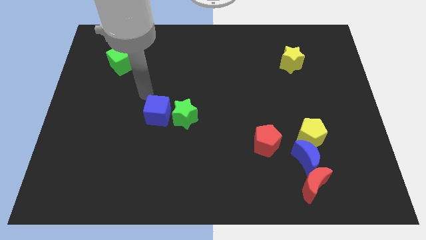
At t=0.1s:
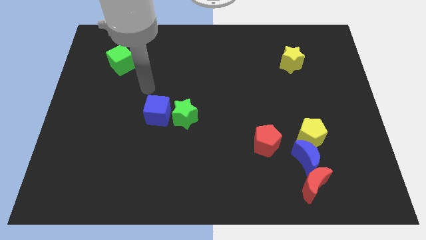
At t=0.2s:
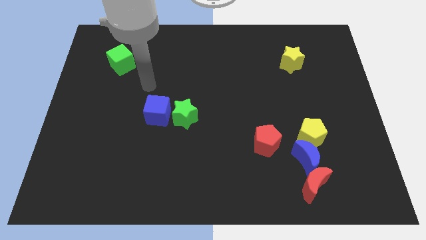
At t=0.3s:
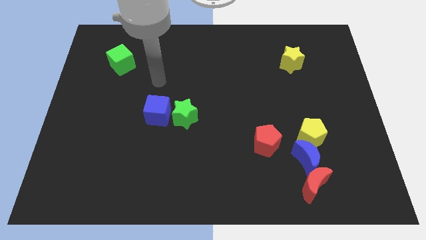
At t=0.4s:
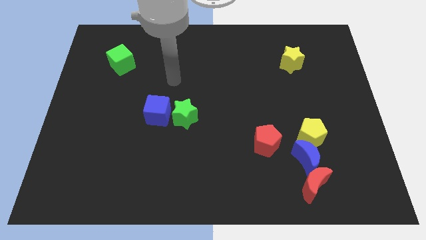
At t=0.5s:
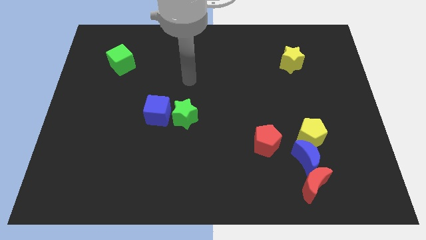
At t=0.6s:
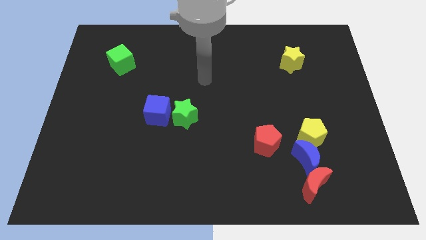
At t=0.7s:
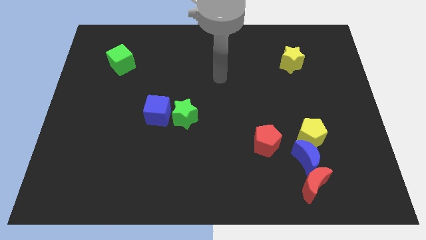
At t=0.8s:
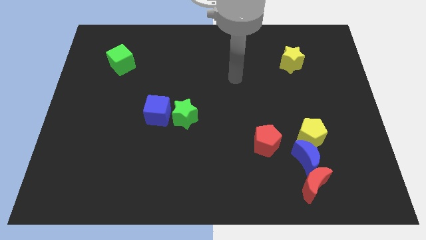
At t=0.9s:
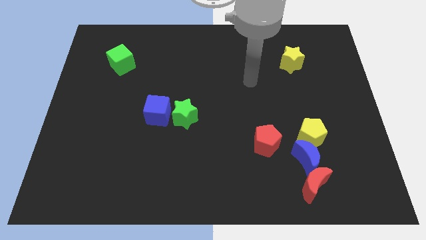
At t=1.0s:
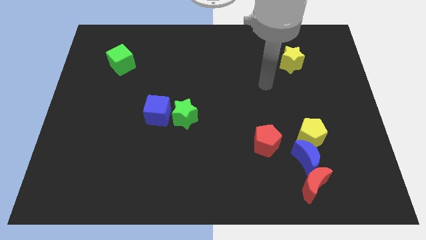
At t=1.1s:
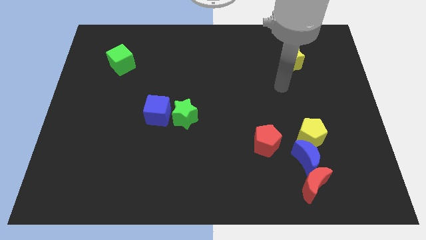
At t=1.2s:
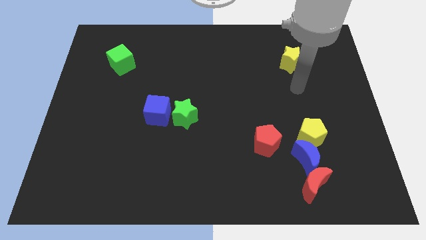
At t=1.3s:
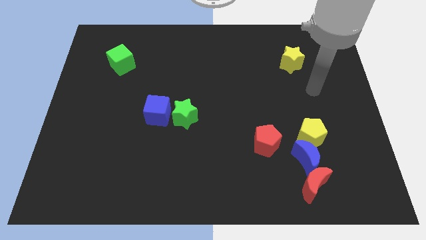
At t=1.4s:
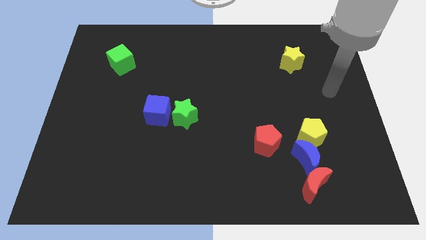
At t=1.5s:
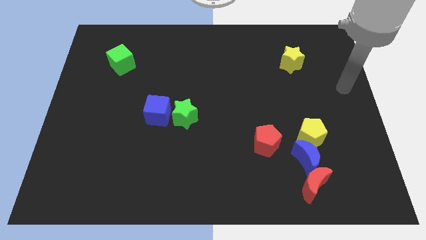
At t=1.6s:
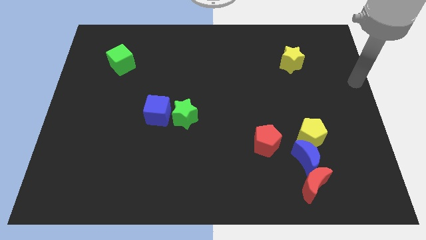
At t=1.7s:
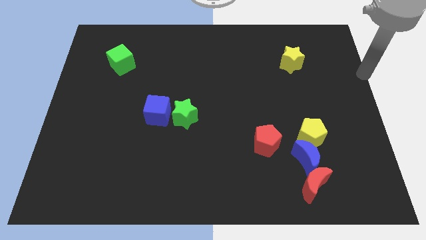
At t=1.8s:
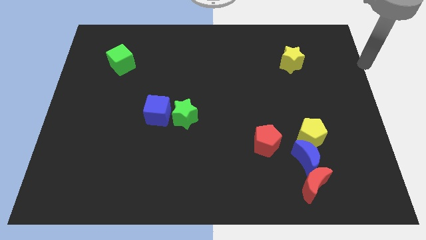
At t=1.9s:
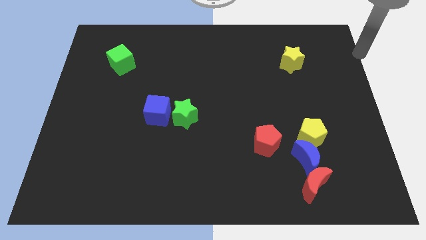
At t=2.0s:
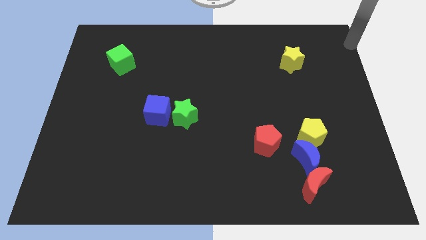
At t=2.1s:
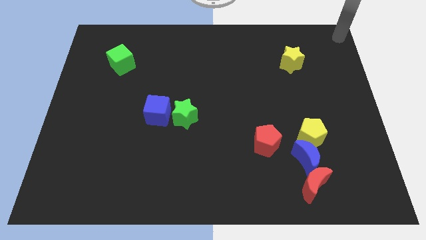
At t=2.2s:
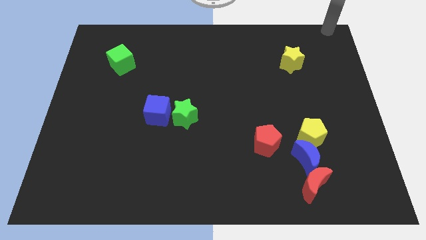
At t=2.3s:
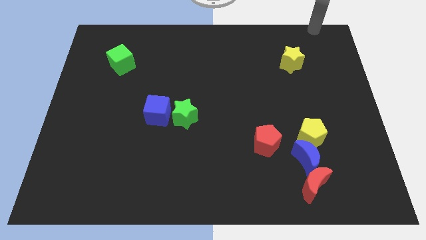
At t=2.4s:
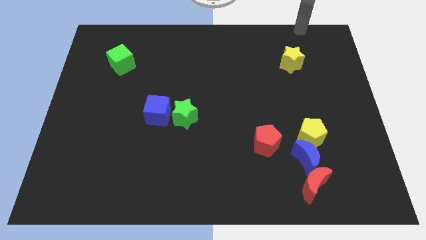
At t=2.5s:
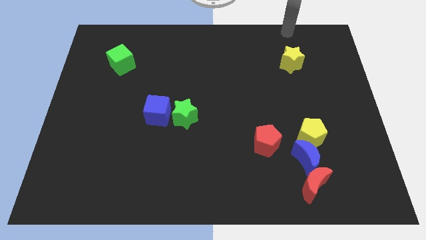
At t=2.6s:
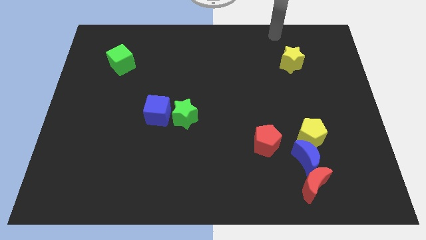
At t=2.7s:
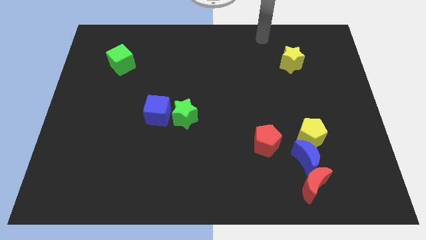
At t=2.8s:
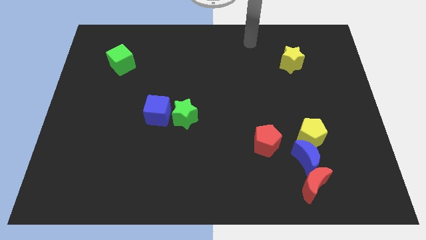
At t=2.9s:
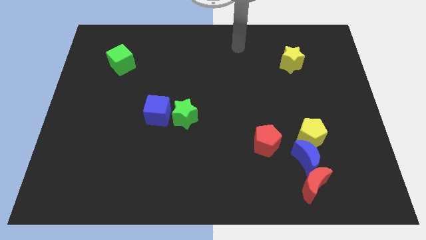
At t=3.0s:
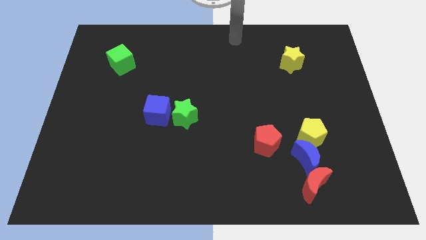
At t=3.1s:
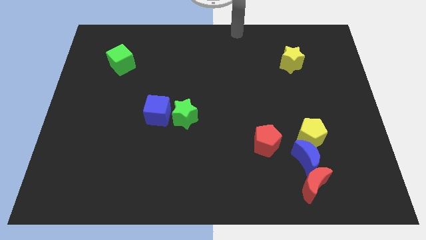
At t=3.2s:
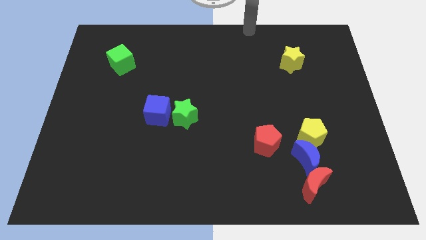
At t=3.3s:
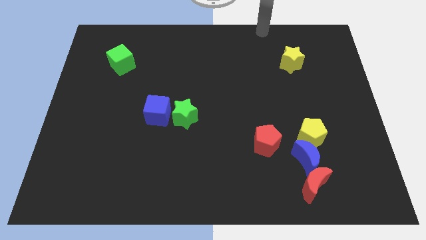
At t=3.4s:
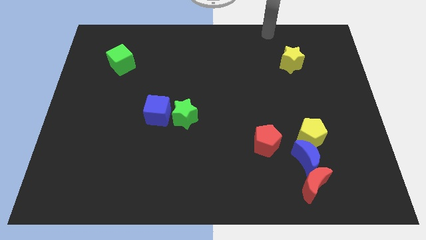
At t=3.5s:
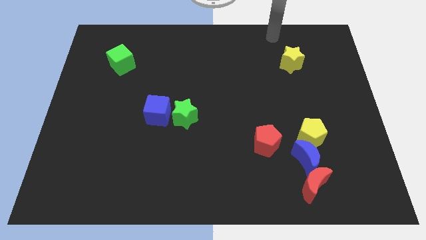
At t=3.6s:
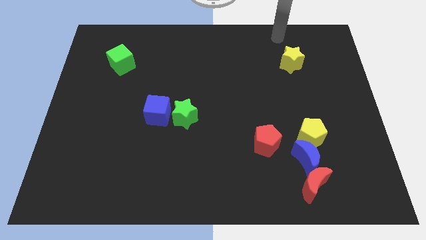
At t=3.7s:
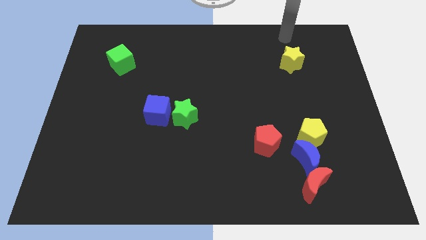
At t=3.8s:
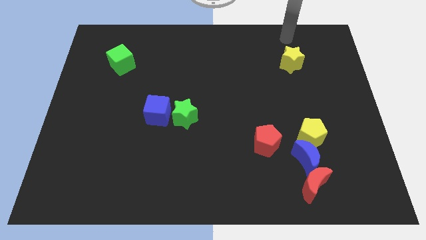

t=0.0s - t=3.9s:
go and point your arm at the top side of the yellow star

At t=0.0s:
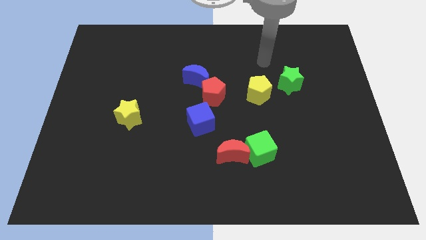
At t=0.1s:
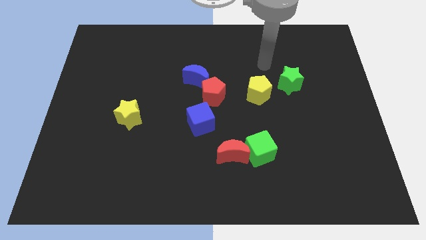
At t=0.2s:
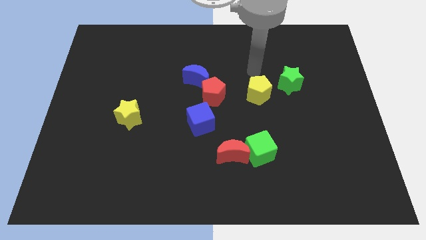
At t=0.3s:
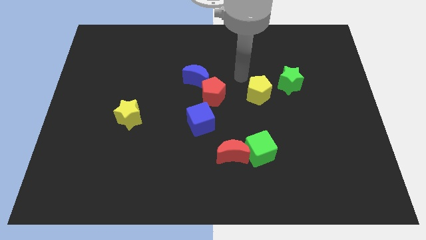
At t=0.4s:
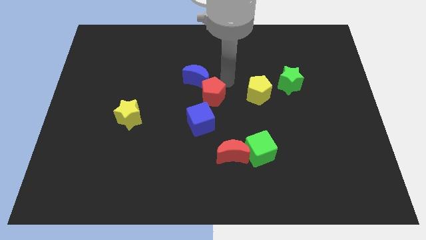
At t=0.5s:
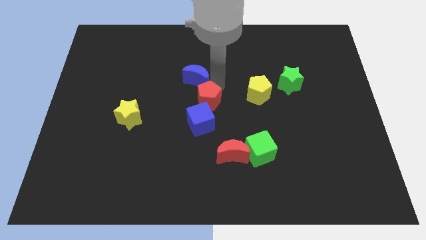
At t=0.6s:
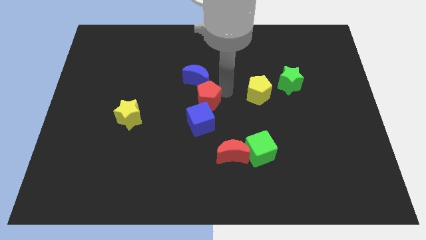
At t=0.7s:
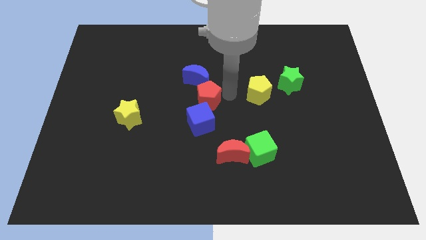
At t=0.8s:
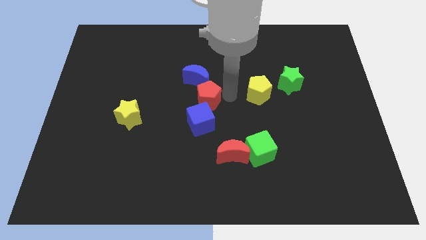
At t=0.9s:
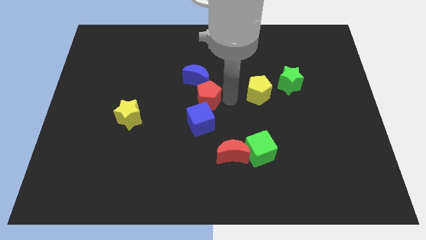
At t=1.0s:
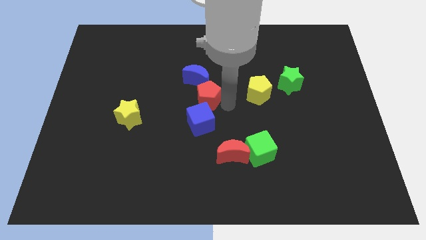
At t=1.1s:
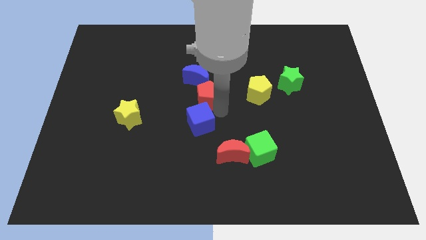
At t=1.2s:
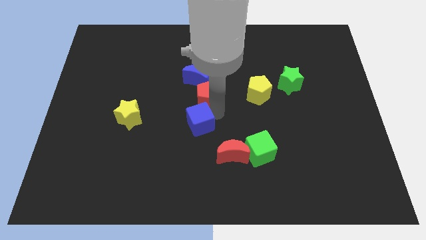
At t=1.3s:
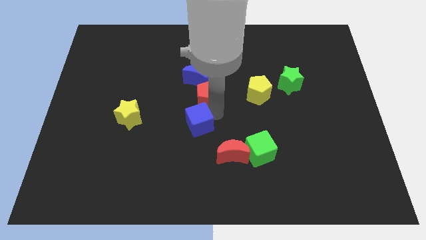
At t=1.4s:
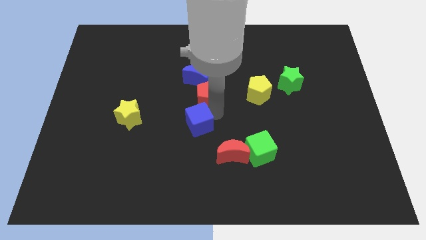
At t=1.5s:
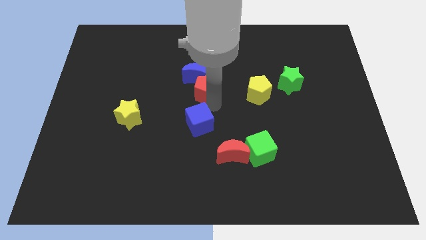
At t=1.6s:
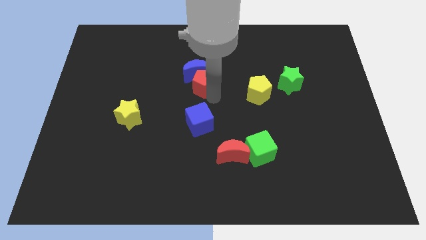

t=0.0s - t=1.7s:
push the red pentagon into blue crescent

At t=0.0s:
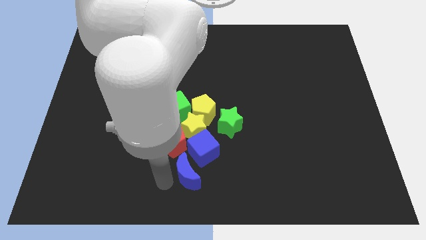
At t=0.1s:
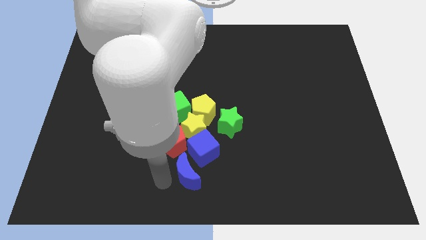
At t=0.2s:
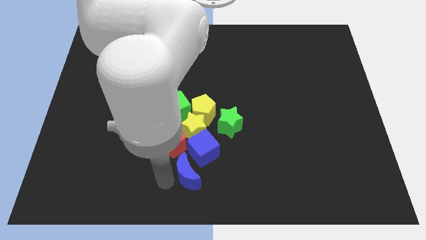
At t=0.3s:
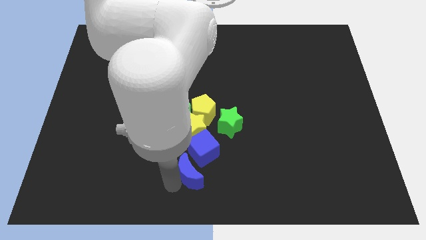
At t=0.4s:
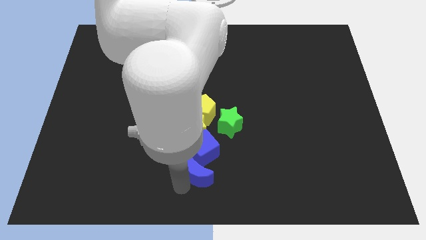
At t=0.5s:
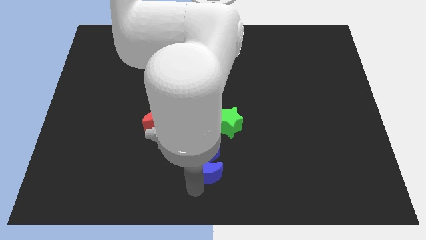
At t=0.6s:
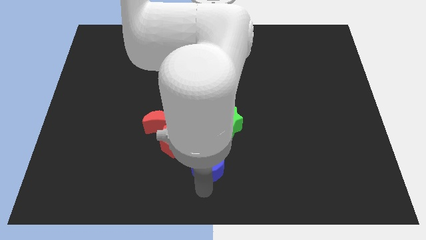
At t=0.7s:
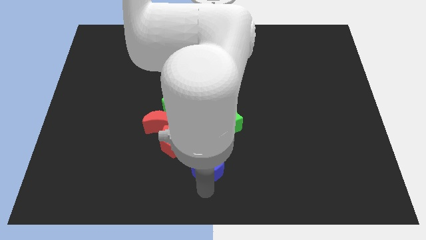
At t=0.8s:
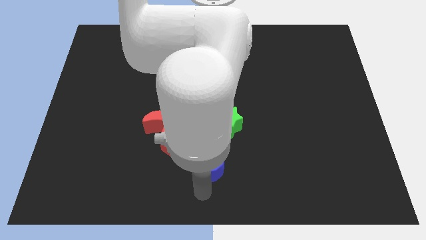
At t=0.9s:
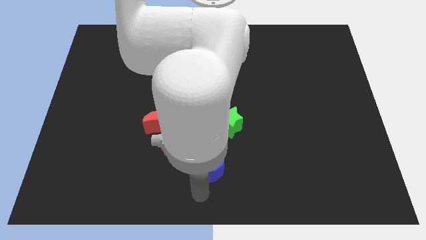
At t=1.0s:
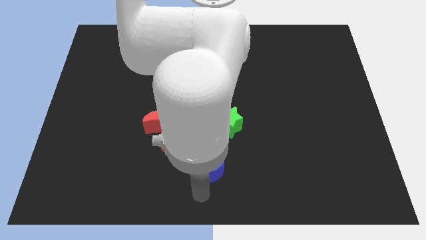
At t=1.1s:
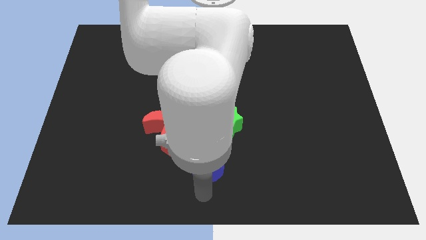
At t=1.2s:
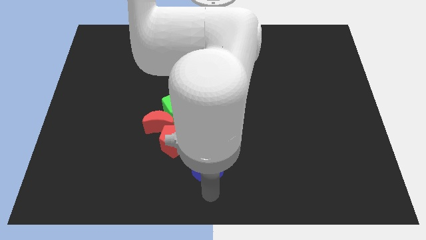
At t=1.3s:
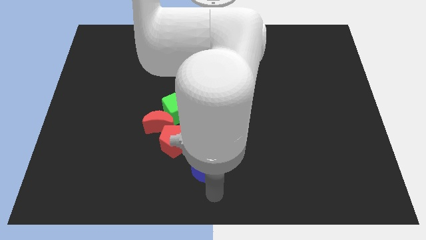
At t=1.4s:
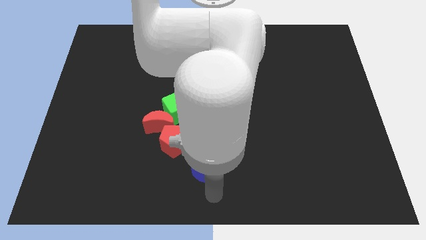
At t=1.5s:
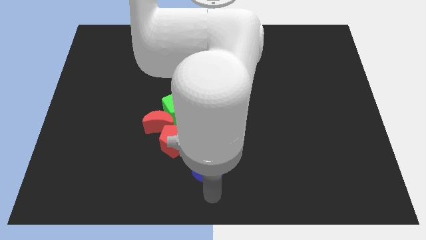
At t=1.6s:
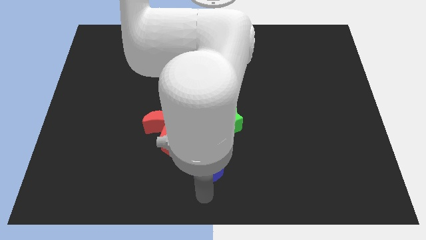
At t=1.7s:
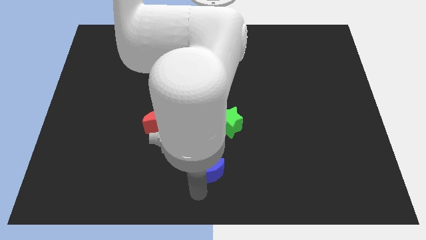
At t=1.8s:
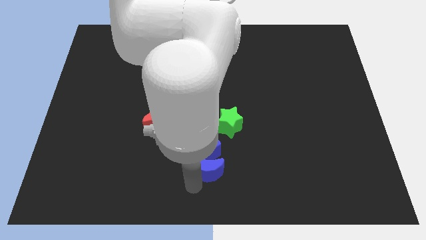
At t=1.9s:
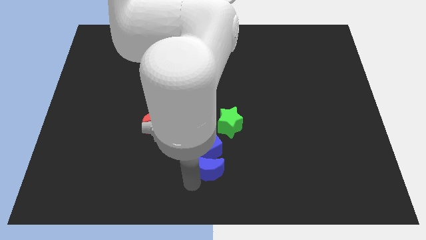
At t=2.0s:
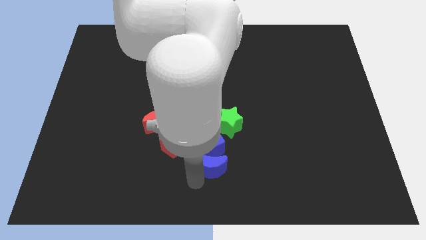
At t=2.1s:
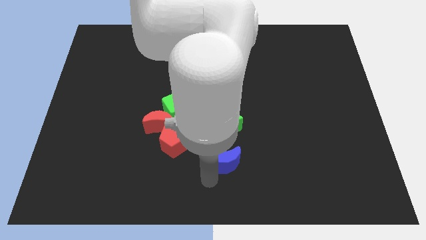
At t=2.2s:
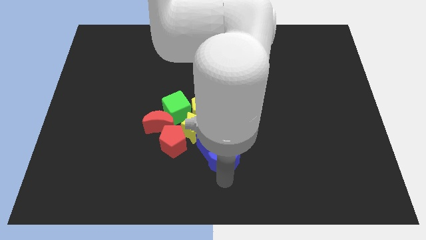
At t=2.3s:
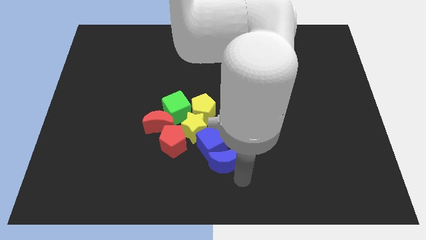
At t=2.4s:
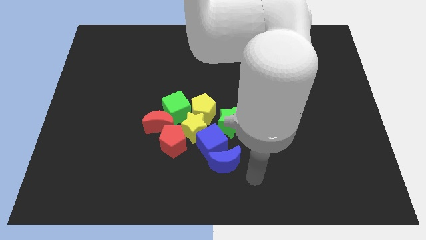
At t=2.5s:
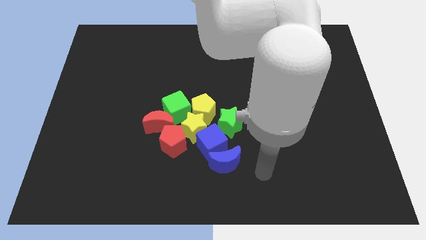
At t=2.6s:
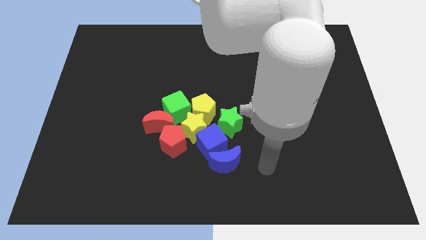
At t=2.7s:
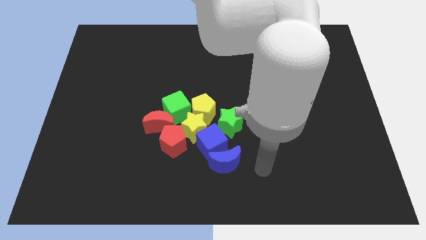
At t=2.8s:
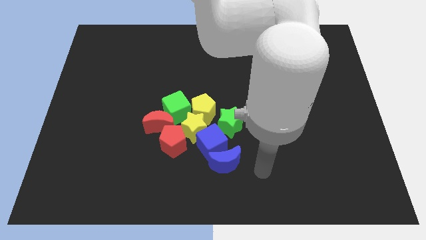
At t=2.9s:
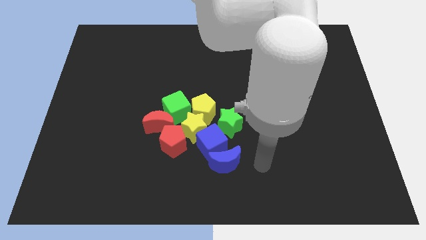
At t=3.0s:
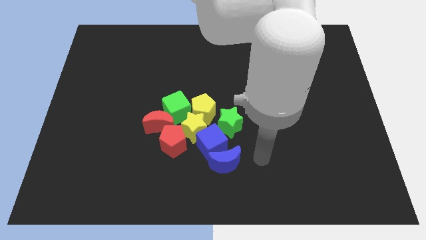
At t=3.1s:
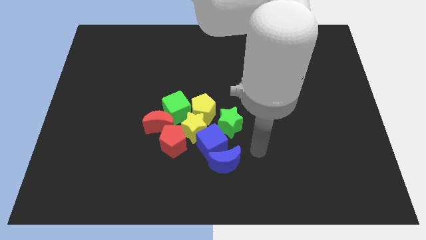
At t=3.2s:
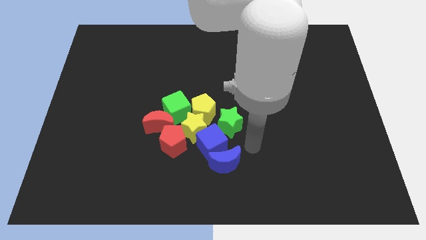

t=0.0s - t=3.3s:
point your arm beside blue moon

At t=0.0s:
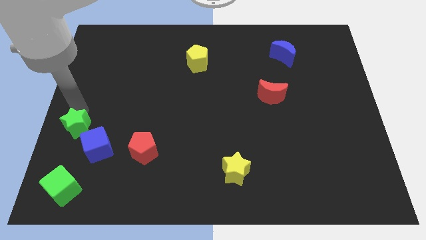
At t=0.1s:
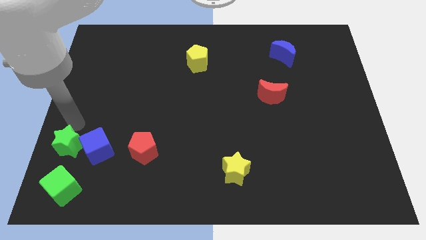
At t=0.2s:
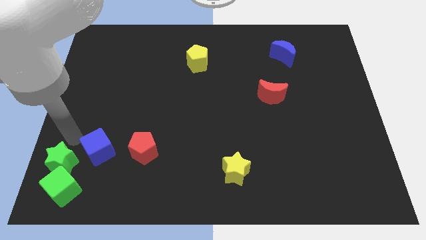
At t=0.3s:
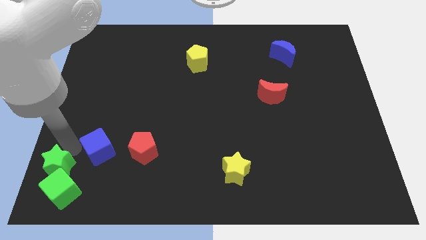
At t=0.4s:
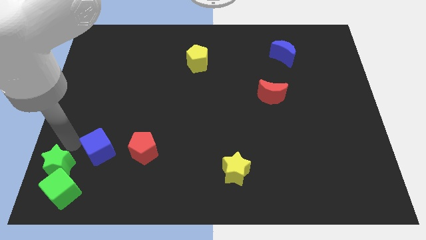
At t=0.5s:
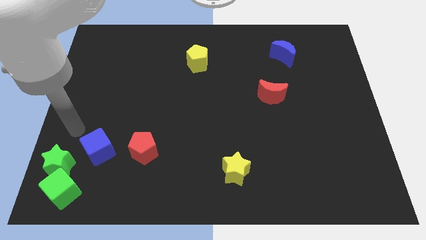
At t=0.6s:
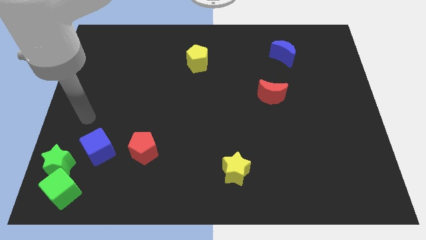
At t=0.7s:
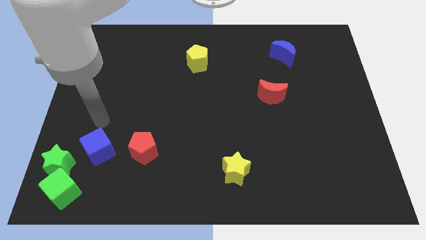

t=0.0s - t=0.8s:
push the green star on the top of the green cube
